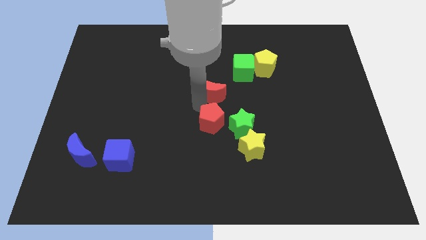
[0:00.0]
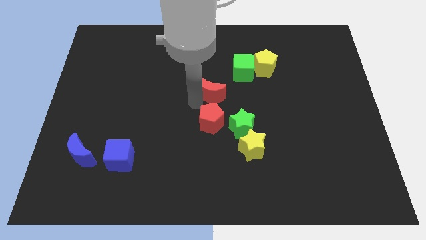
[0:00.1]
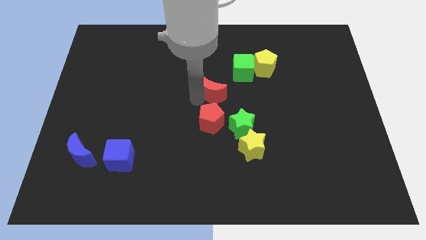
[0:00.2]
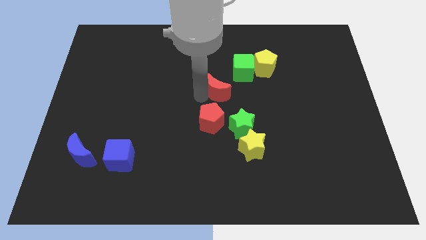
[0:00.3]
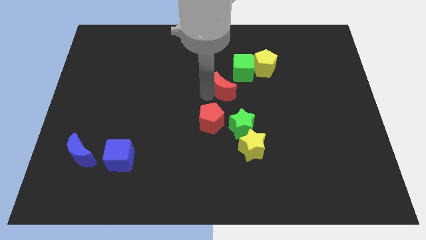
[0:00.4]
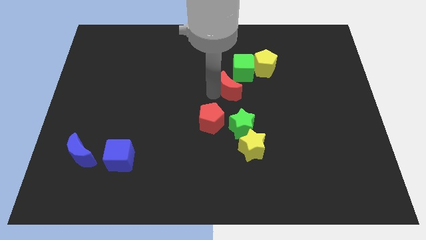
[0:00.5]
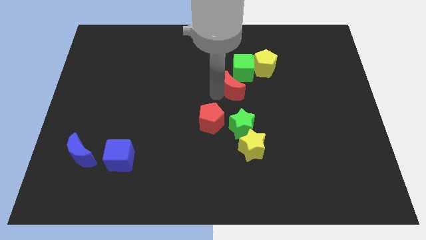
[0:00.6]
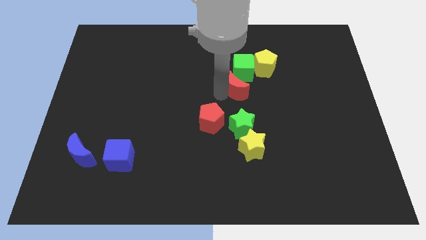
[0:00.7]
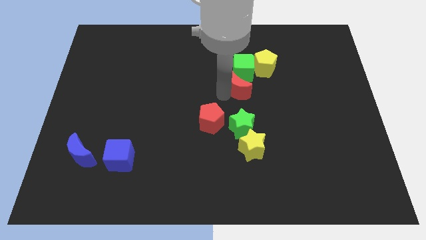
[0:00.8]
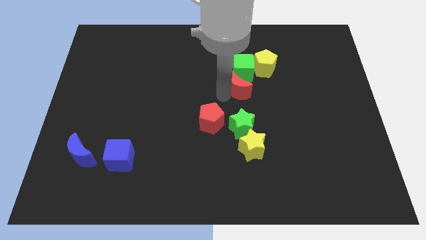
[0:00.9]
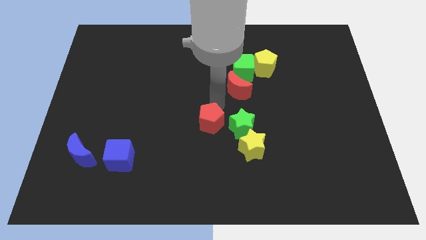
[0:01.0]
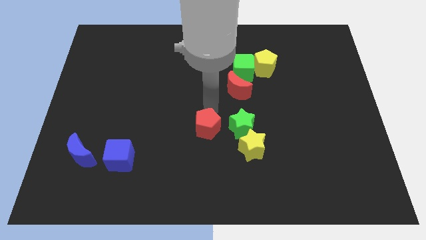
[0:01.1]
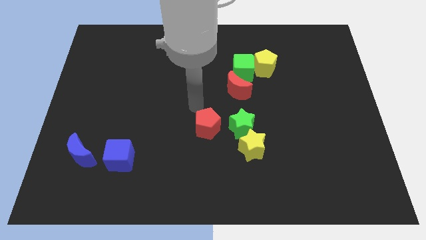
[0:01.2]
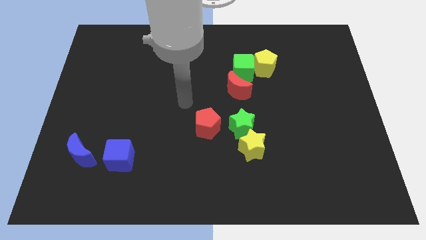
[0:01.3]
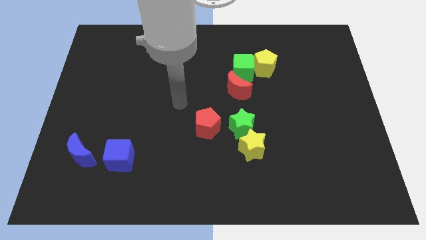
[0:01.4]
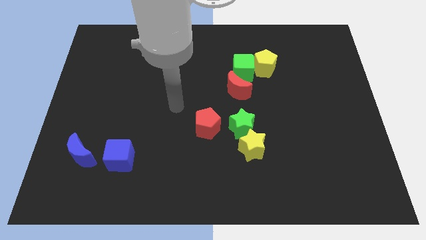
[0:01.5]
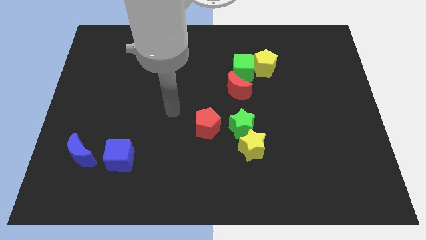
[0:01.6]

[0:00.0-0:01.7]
move the red crescent to the bottom of the green cube

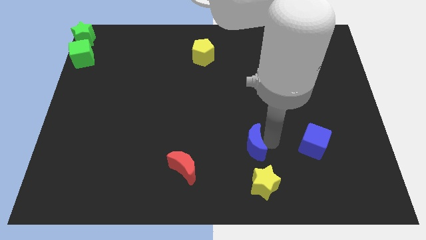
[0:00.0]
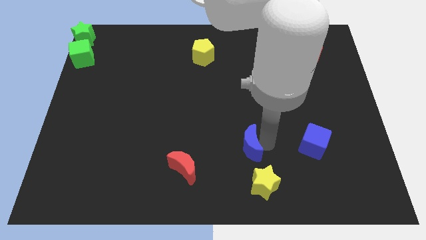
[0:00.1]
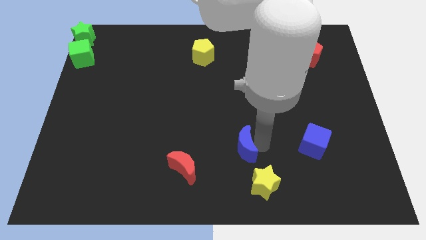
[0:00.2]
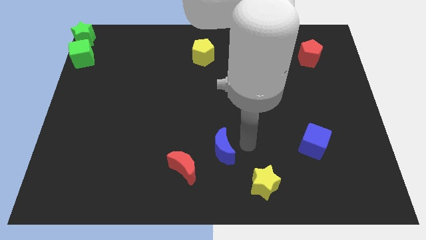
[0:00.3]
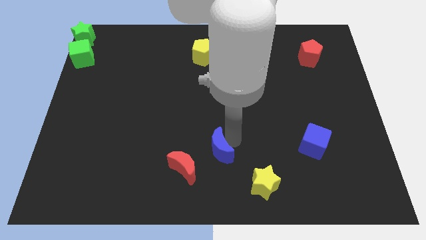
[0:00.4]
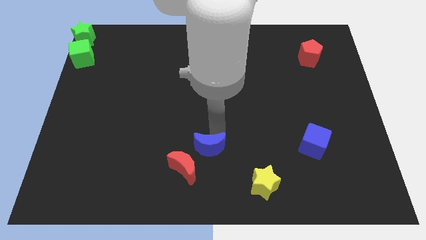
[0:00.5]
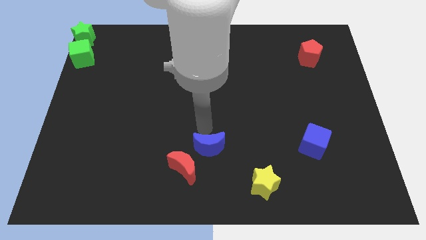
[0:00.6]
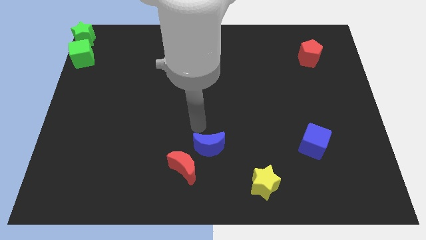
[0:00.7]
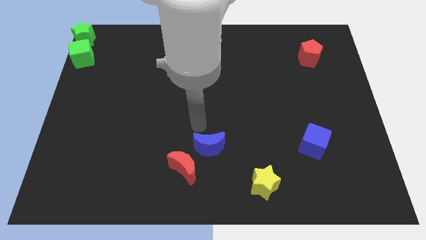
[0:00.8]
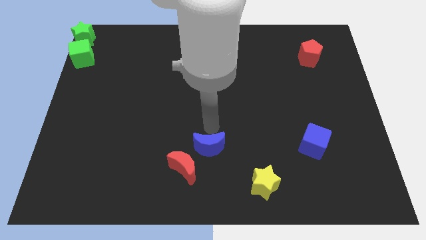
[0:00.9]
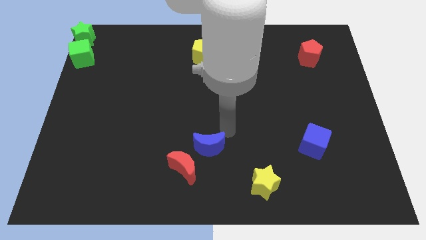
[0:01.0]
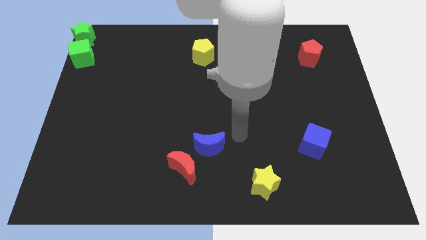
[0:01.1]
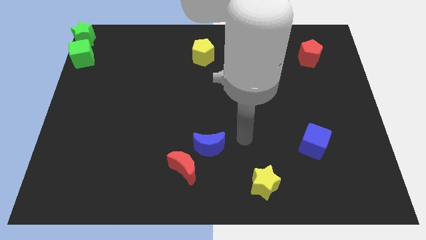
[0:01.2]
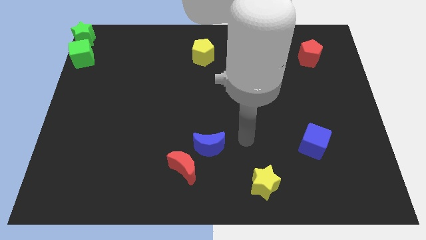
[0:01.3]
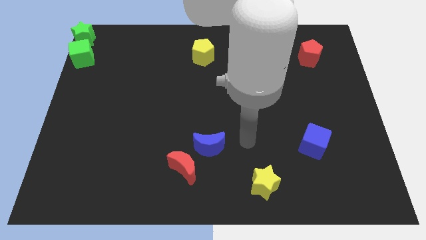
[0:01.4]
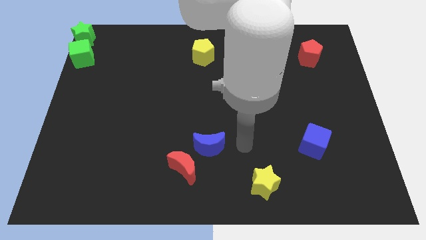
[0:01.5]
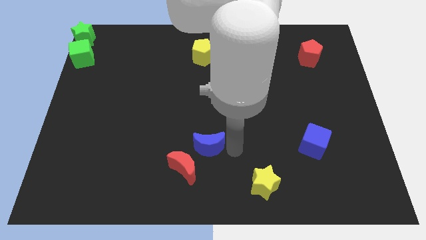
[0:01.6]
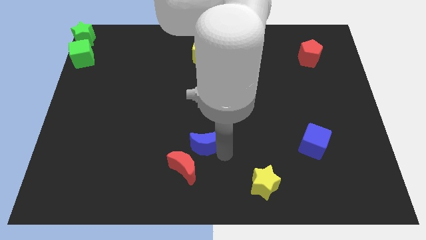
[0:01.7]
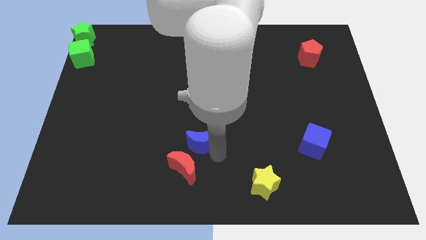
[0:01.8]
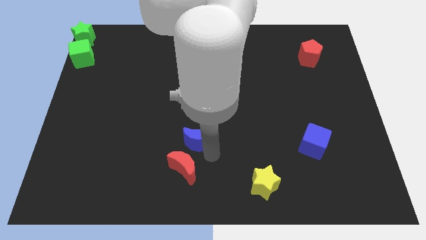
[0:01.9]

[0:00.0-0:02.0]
place the blue moon in between the yellow pentagon and red moon

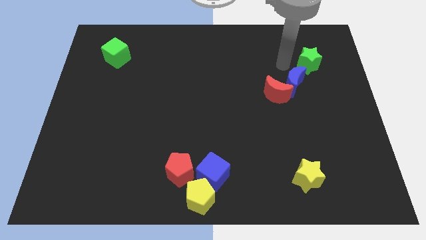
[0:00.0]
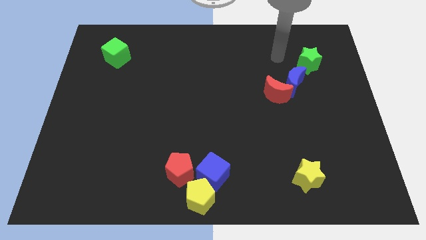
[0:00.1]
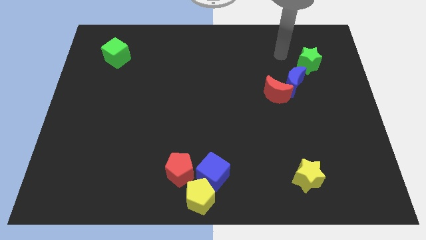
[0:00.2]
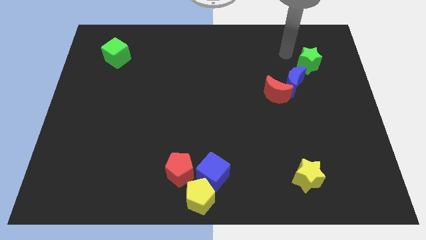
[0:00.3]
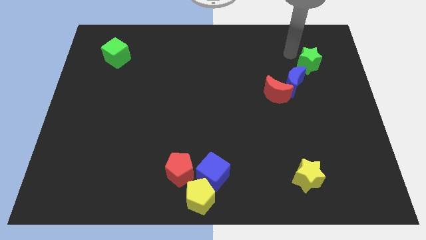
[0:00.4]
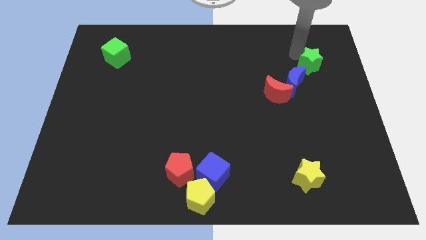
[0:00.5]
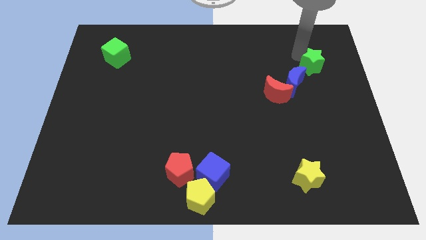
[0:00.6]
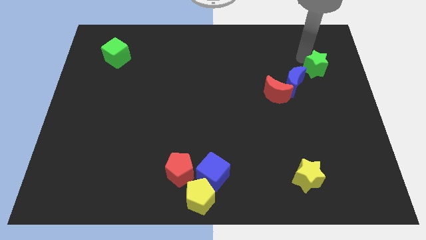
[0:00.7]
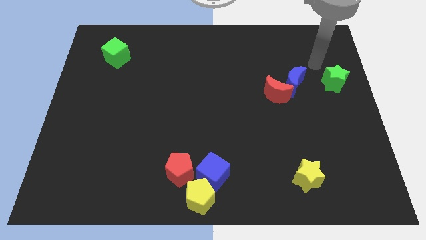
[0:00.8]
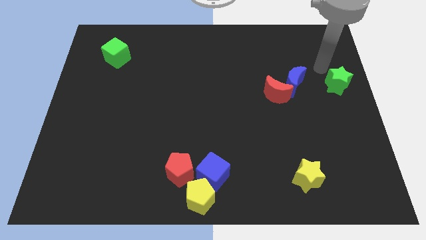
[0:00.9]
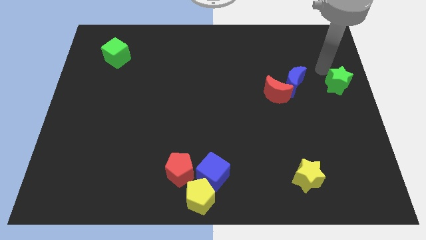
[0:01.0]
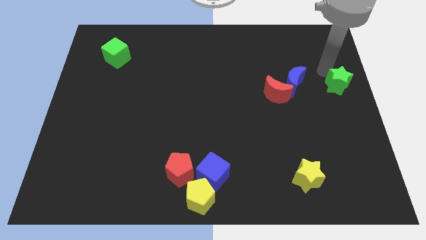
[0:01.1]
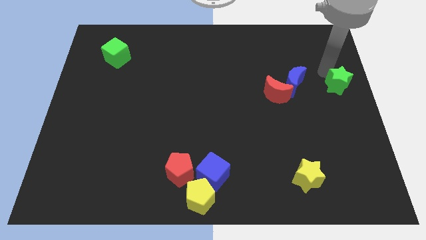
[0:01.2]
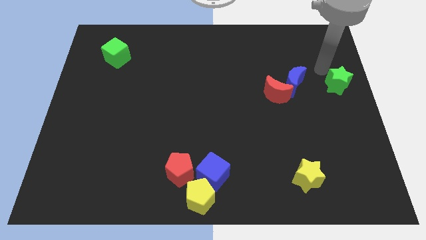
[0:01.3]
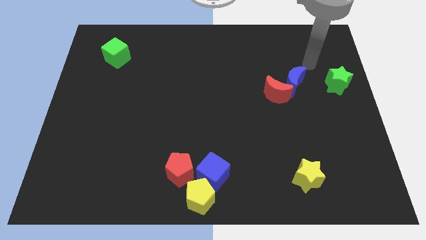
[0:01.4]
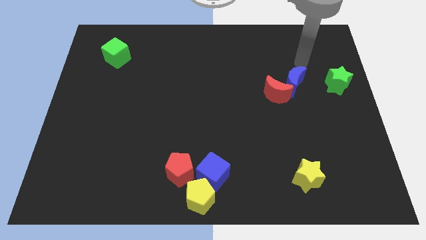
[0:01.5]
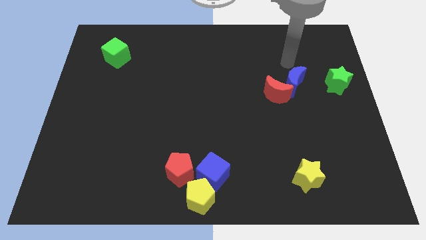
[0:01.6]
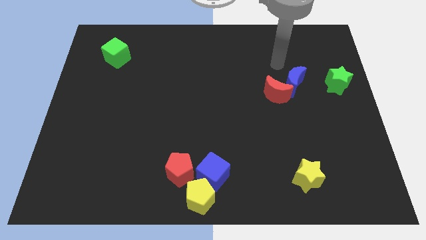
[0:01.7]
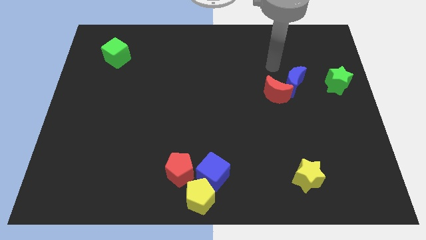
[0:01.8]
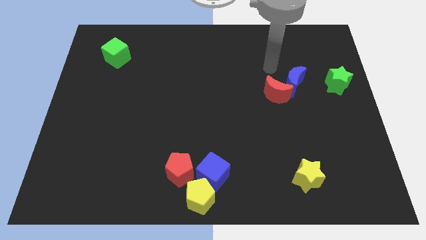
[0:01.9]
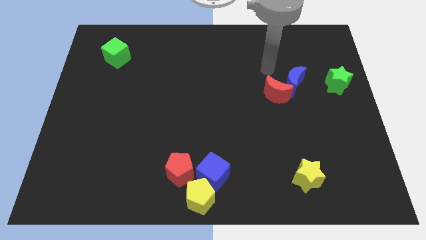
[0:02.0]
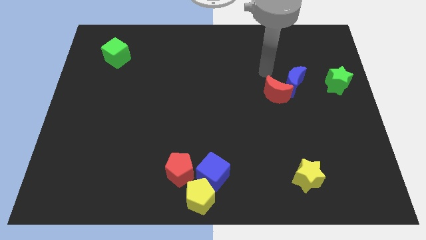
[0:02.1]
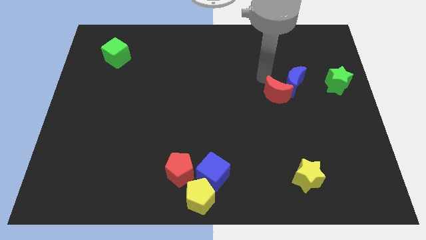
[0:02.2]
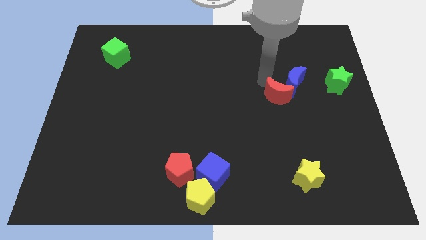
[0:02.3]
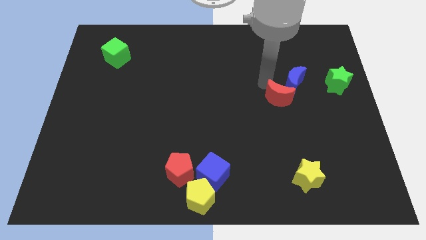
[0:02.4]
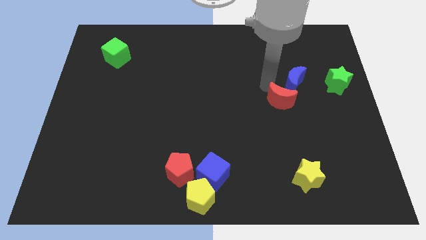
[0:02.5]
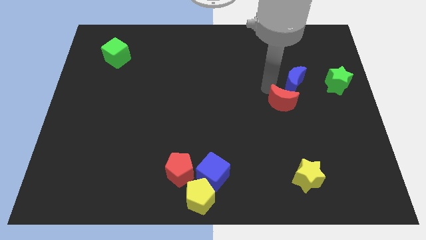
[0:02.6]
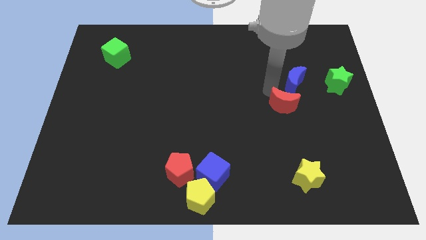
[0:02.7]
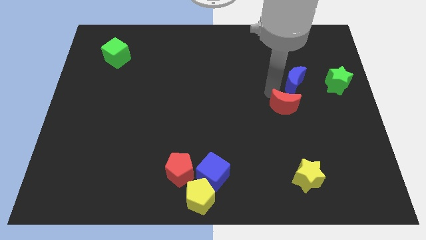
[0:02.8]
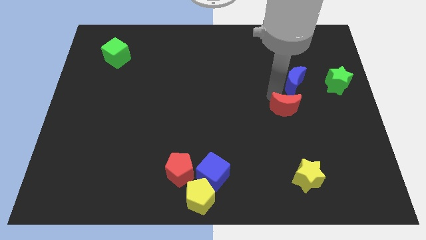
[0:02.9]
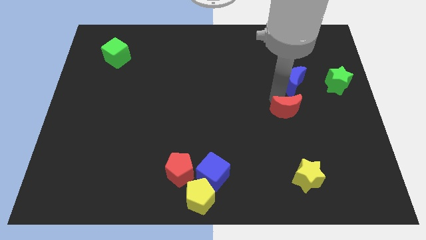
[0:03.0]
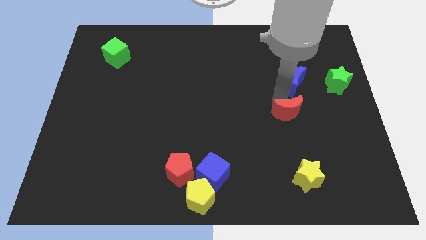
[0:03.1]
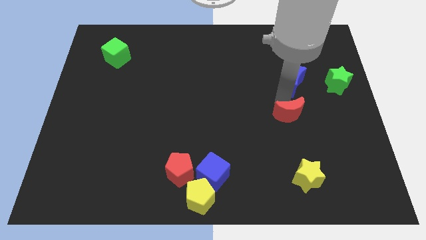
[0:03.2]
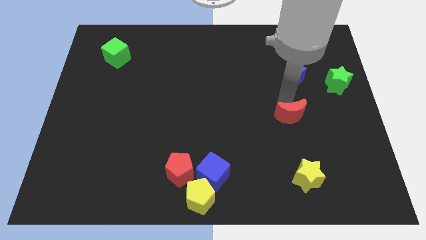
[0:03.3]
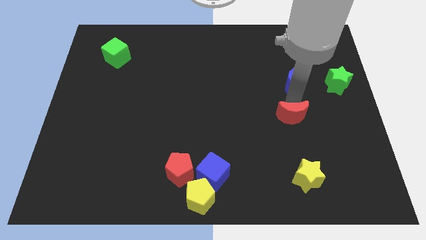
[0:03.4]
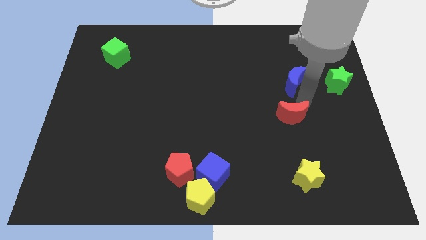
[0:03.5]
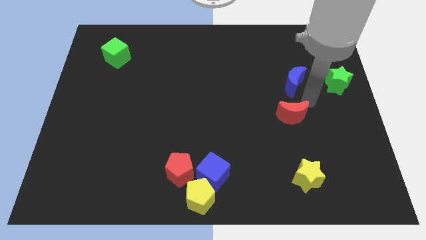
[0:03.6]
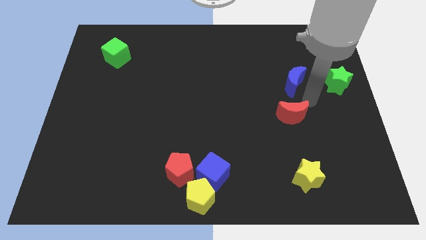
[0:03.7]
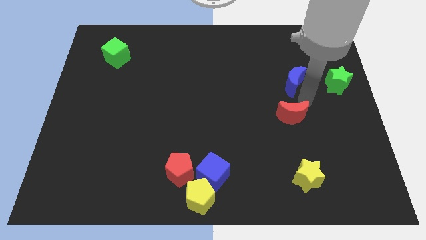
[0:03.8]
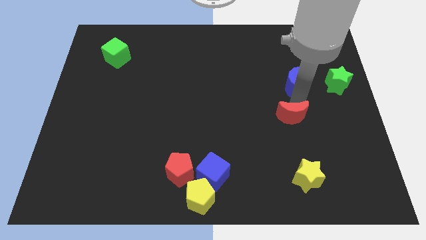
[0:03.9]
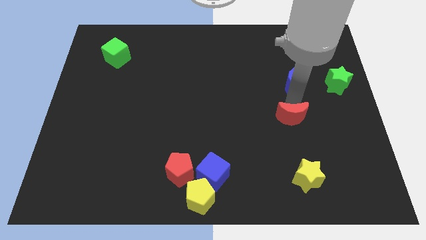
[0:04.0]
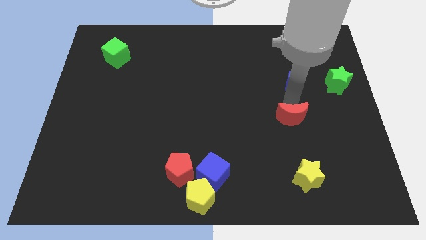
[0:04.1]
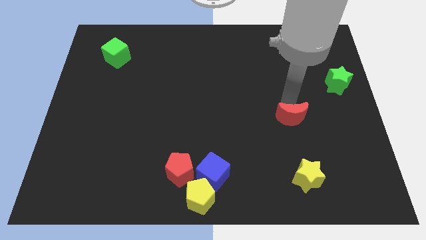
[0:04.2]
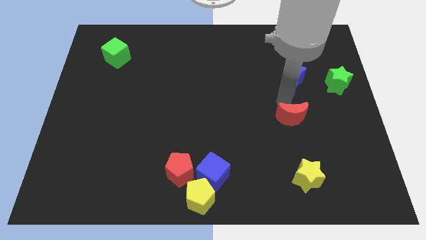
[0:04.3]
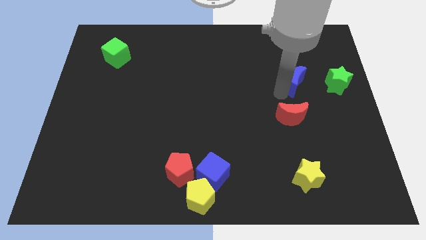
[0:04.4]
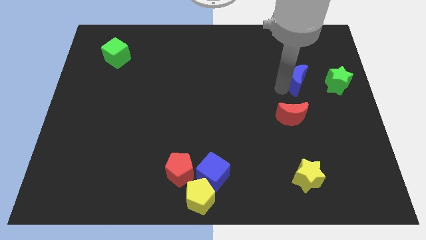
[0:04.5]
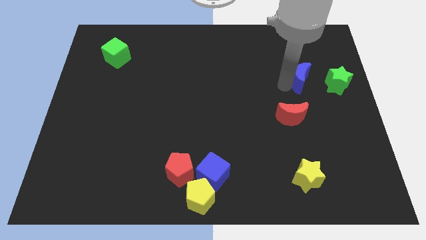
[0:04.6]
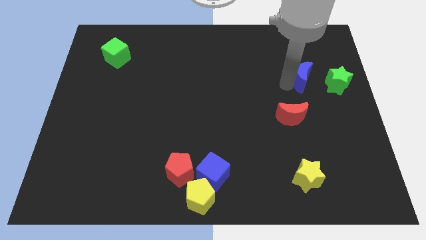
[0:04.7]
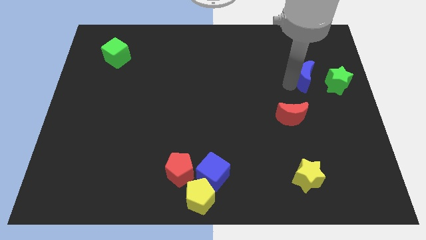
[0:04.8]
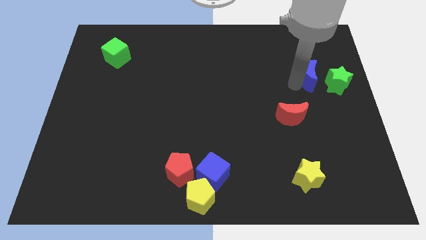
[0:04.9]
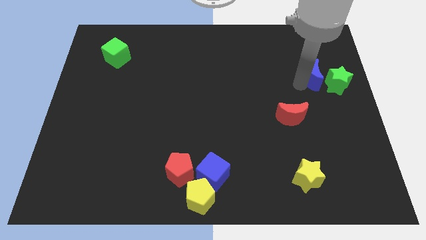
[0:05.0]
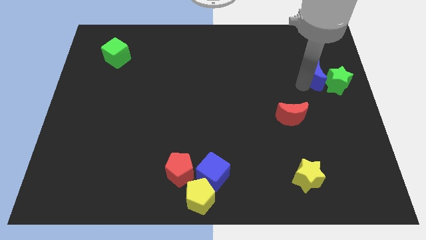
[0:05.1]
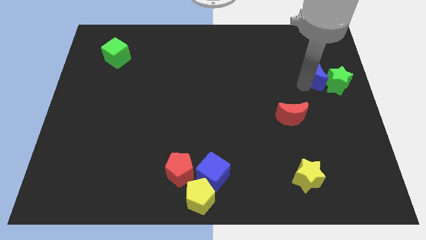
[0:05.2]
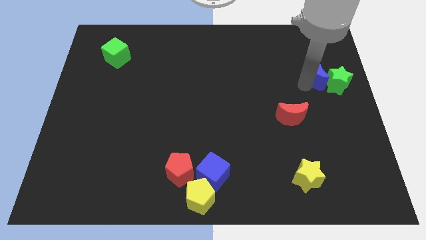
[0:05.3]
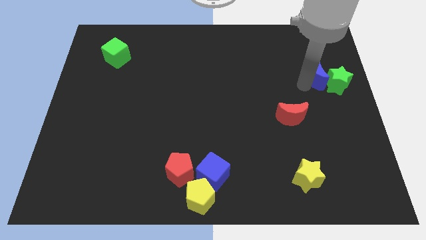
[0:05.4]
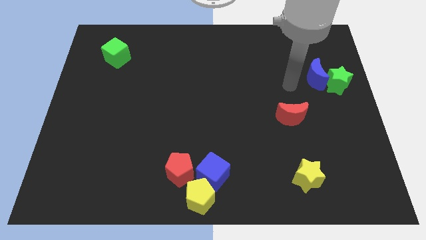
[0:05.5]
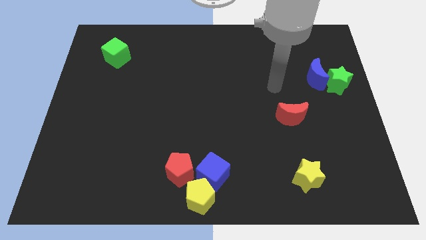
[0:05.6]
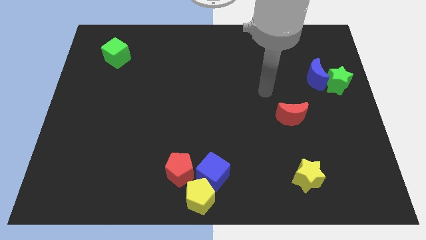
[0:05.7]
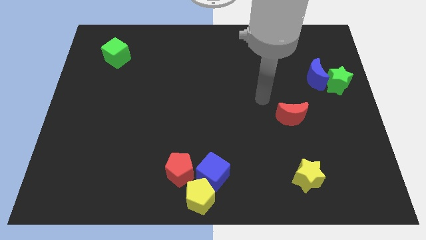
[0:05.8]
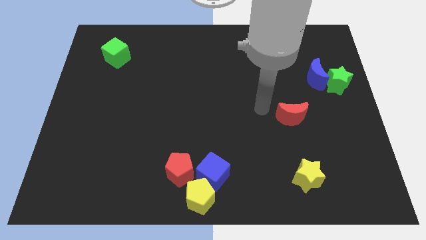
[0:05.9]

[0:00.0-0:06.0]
push blue moon into green star
